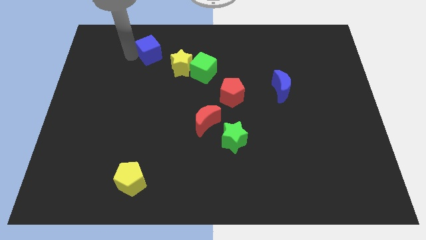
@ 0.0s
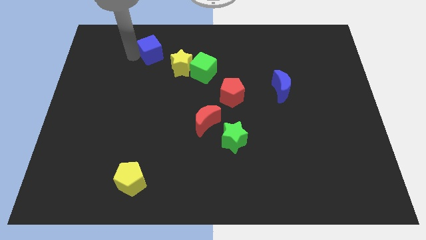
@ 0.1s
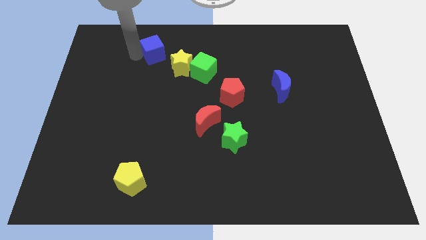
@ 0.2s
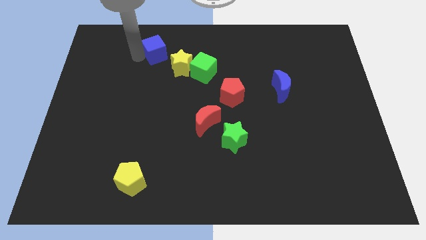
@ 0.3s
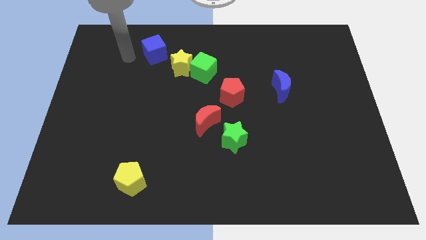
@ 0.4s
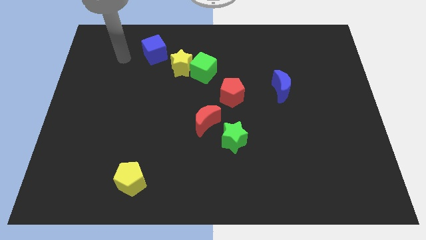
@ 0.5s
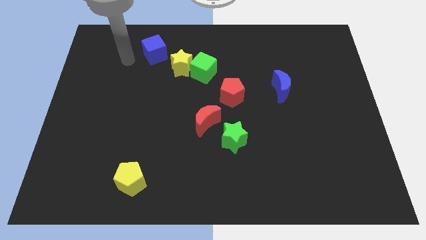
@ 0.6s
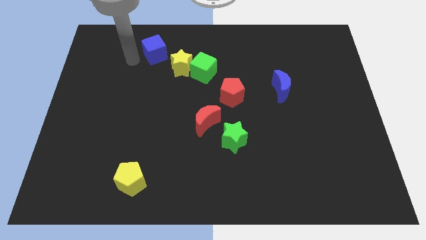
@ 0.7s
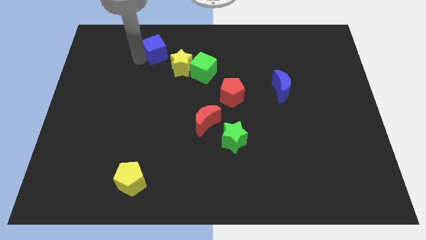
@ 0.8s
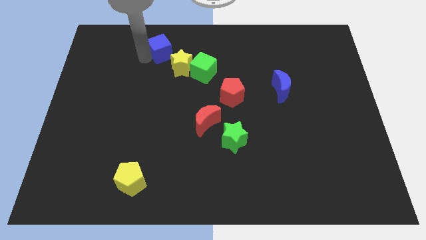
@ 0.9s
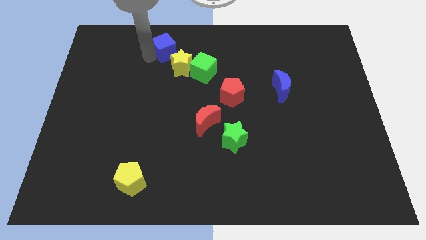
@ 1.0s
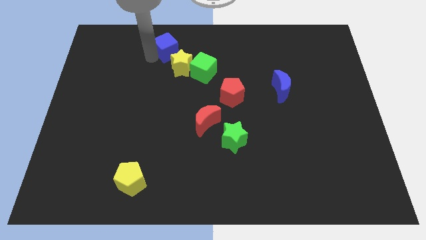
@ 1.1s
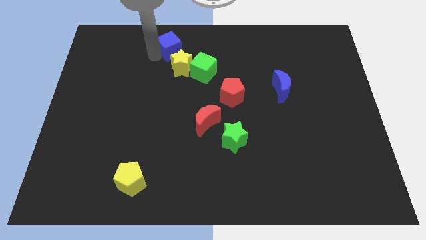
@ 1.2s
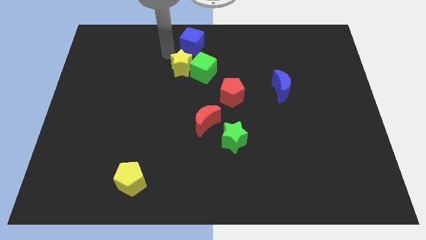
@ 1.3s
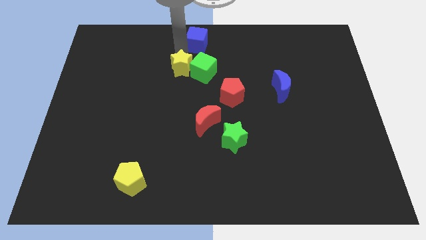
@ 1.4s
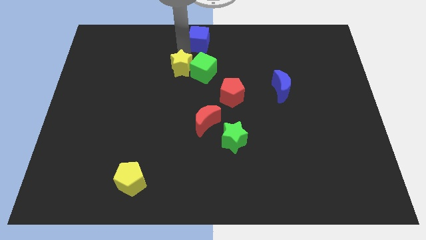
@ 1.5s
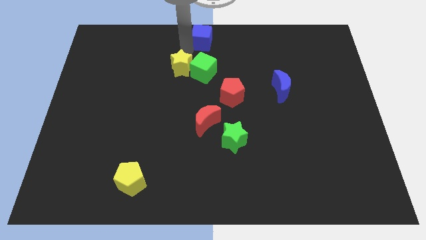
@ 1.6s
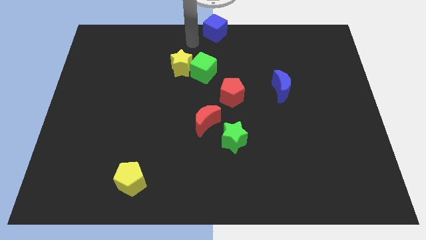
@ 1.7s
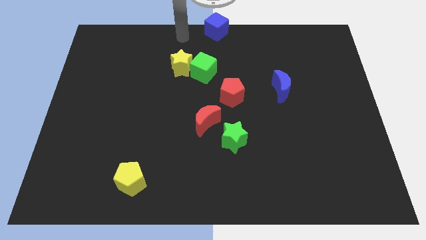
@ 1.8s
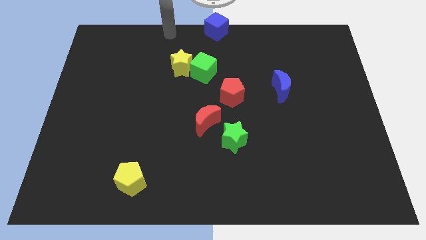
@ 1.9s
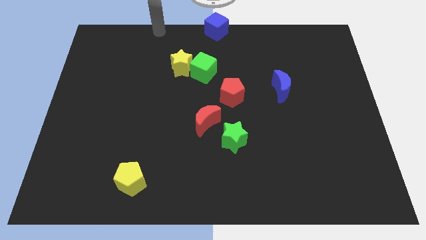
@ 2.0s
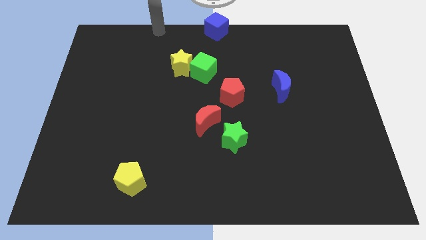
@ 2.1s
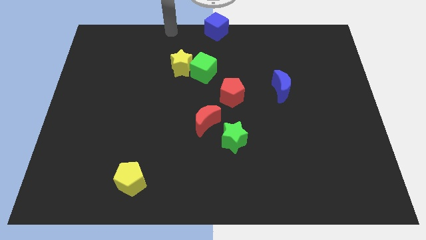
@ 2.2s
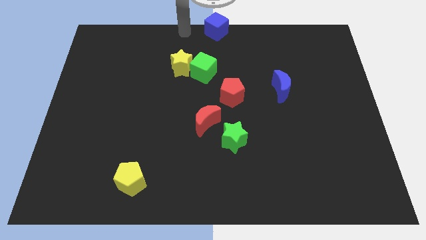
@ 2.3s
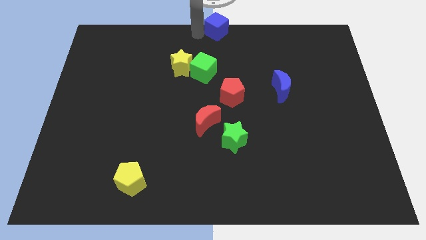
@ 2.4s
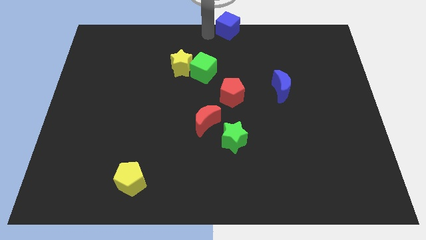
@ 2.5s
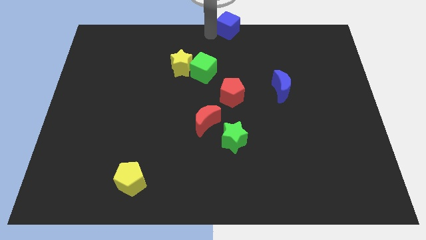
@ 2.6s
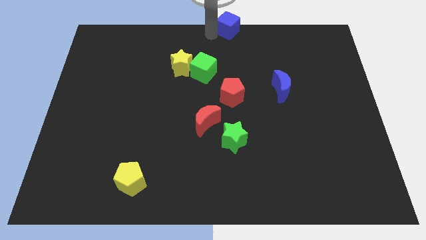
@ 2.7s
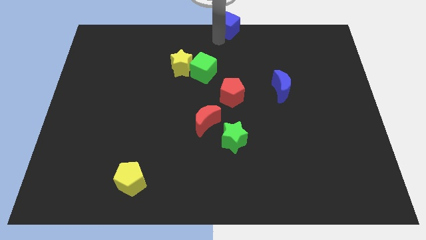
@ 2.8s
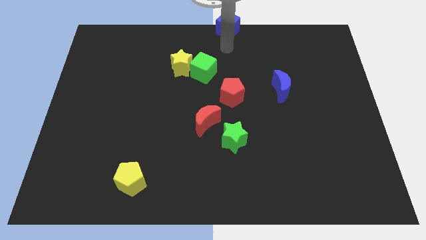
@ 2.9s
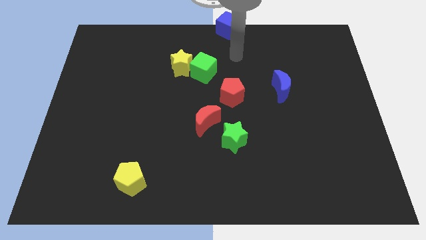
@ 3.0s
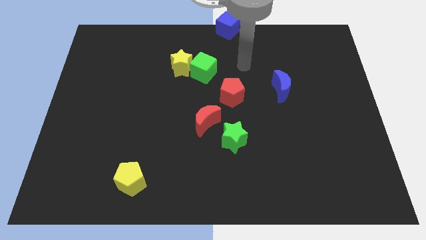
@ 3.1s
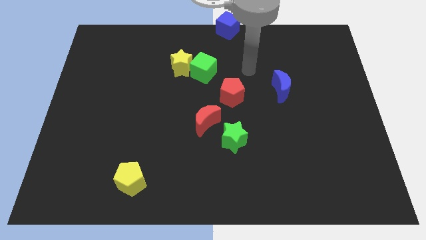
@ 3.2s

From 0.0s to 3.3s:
push blue cube vertically above red pentagon

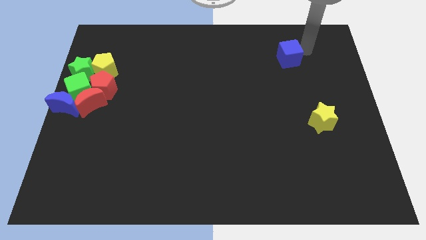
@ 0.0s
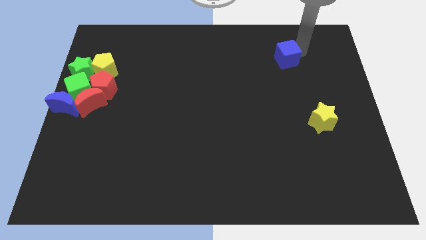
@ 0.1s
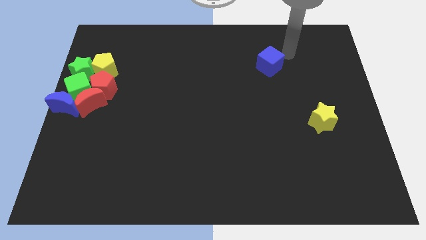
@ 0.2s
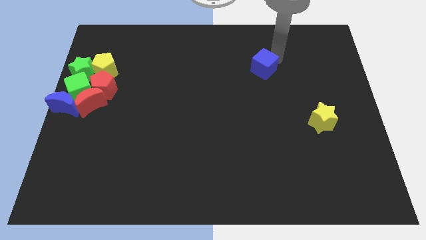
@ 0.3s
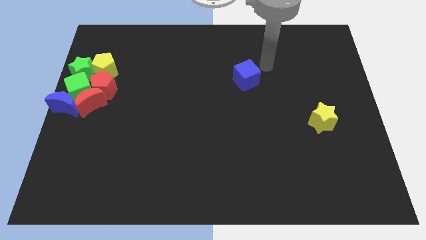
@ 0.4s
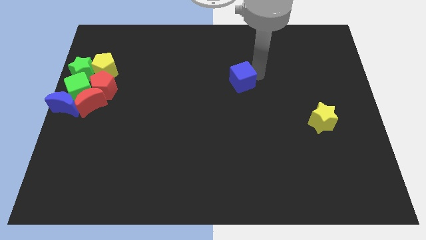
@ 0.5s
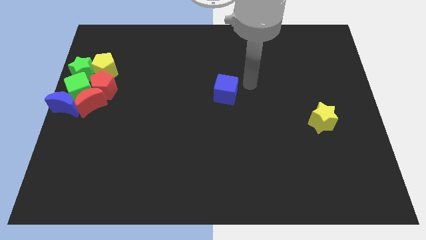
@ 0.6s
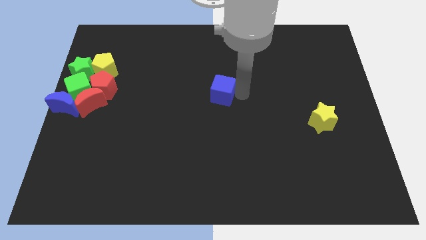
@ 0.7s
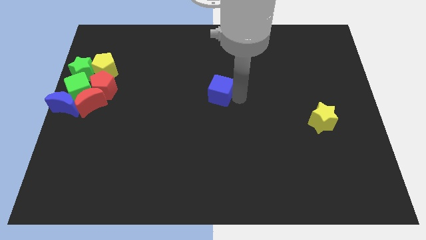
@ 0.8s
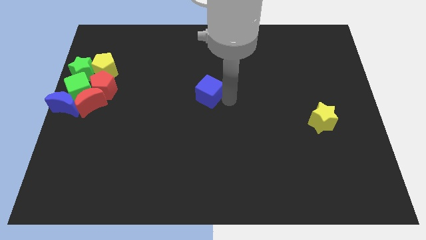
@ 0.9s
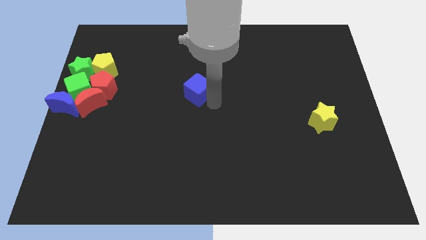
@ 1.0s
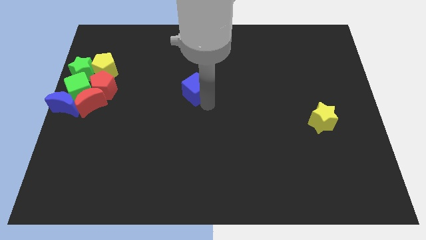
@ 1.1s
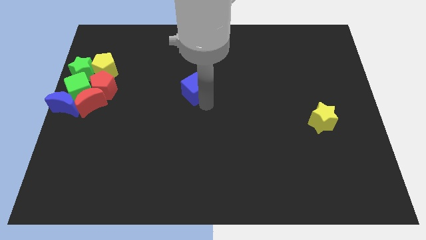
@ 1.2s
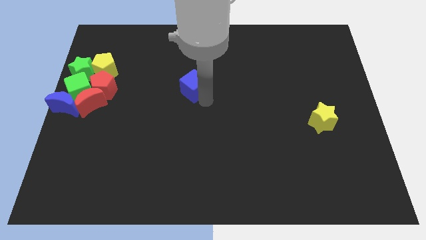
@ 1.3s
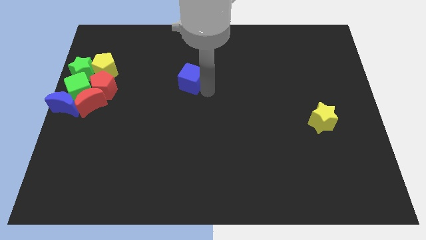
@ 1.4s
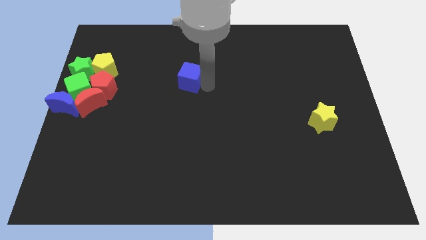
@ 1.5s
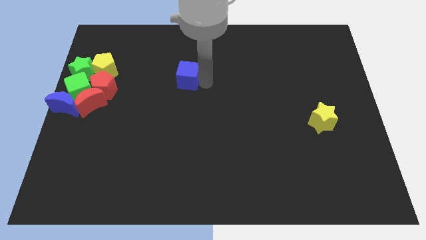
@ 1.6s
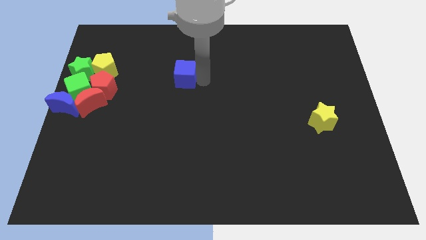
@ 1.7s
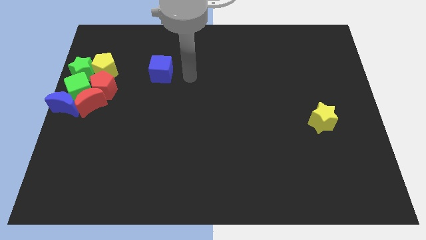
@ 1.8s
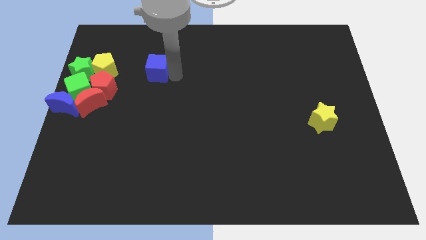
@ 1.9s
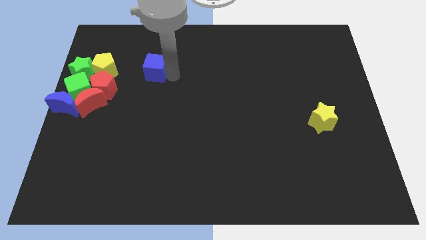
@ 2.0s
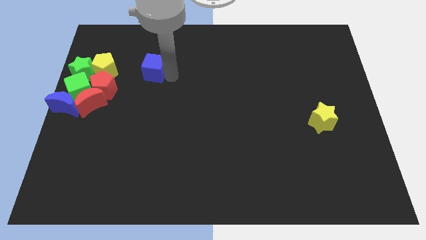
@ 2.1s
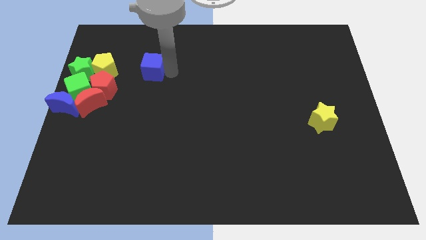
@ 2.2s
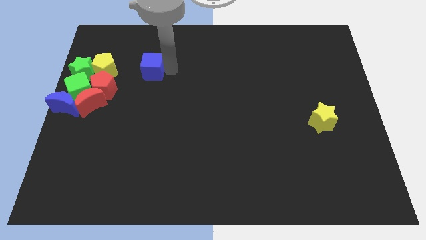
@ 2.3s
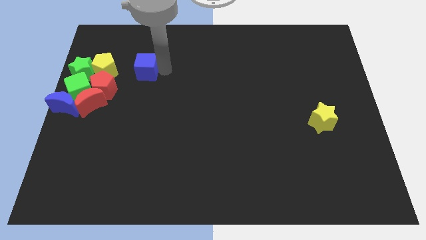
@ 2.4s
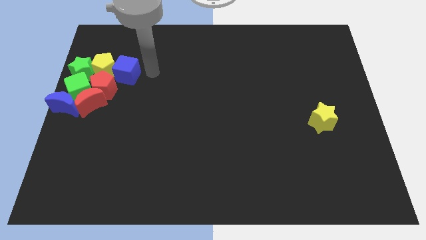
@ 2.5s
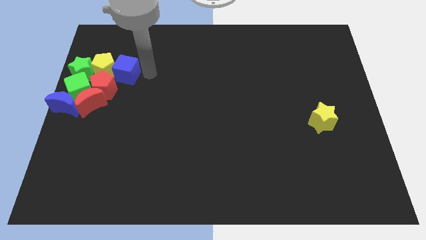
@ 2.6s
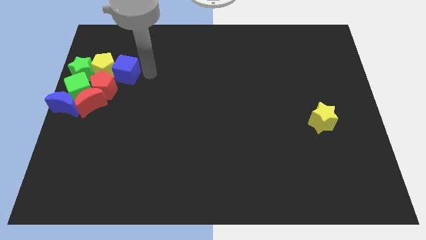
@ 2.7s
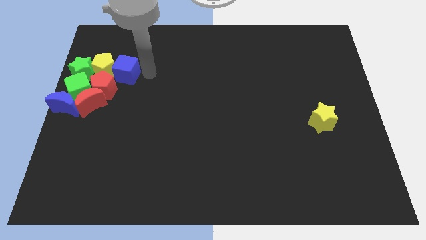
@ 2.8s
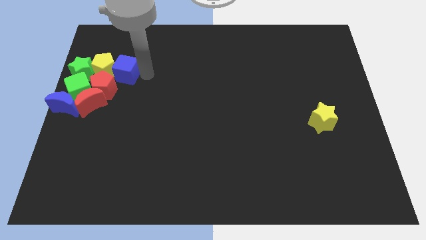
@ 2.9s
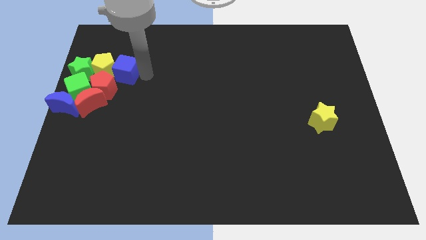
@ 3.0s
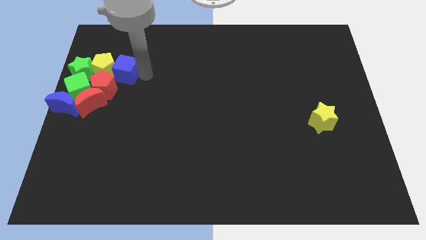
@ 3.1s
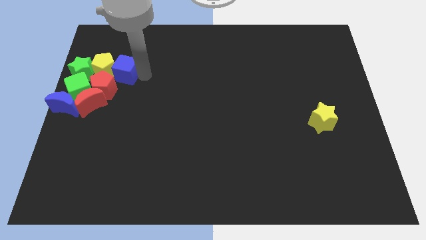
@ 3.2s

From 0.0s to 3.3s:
slide the blue cube right to the yellow pentagon

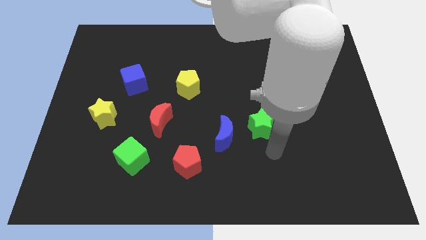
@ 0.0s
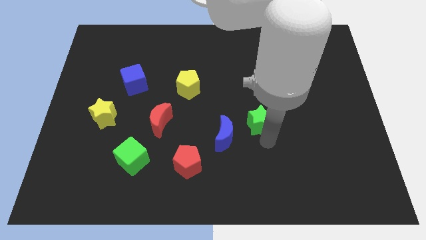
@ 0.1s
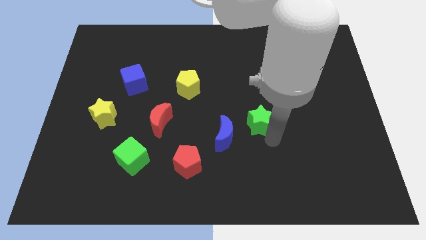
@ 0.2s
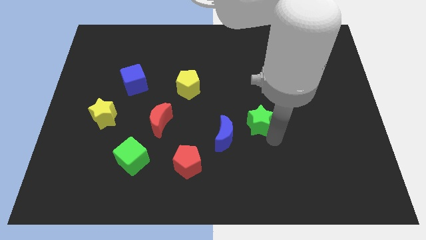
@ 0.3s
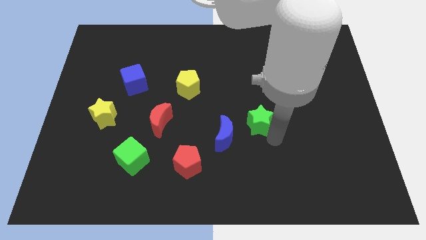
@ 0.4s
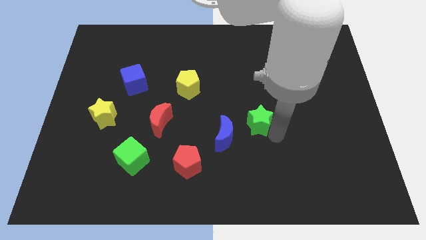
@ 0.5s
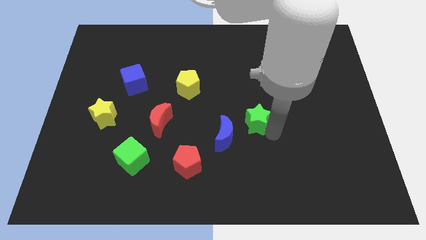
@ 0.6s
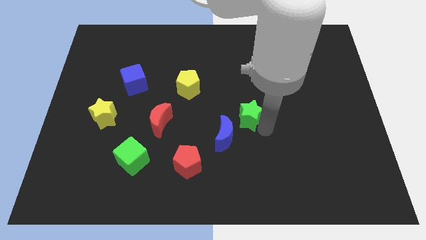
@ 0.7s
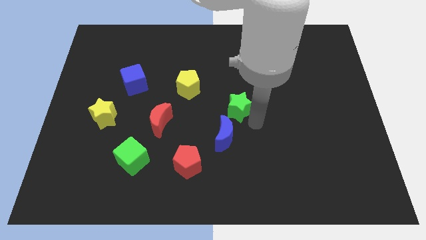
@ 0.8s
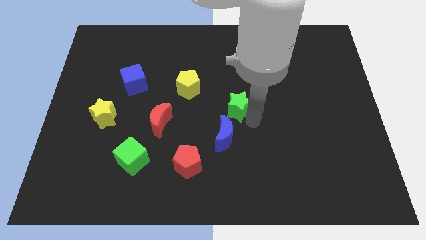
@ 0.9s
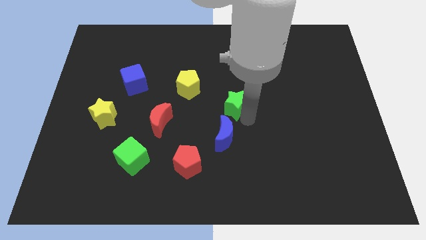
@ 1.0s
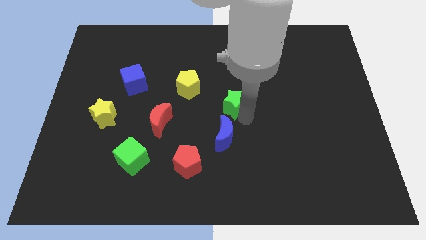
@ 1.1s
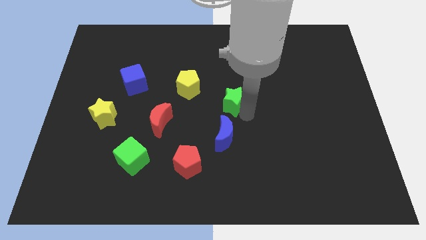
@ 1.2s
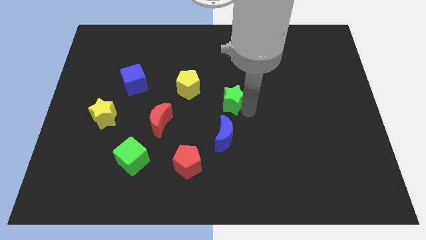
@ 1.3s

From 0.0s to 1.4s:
place the green star diagonally top right to the blue moon

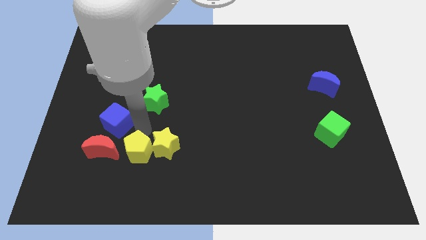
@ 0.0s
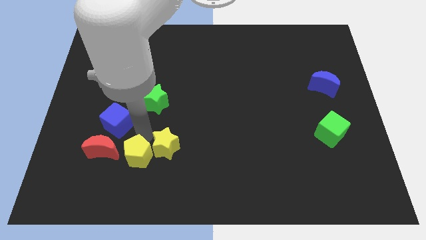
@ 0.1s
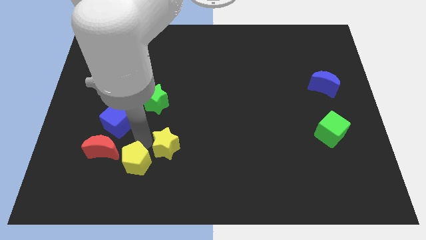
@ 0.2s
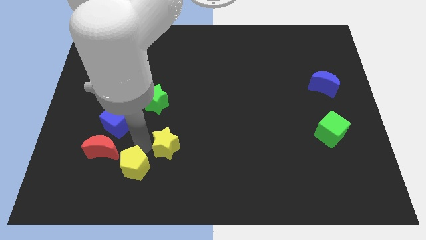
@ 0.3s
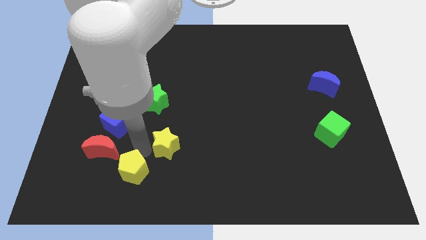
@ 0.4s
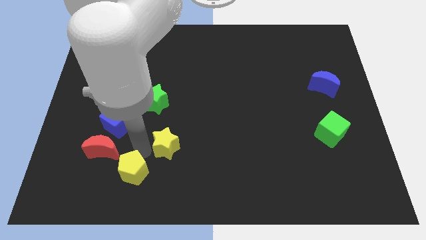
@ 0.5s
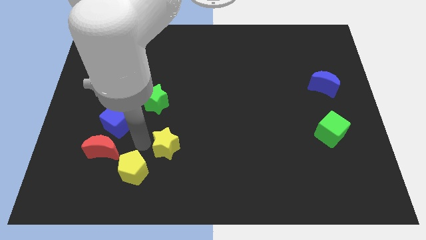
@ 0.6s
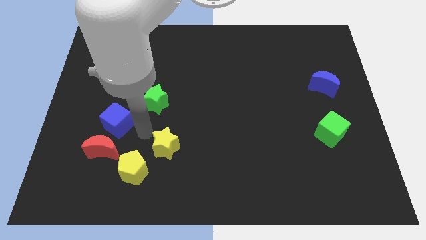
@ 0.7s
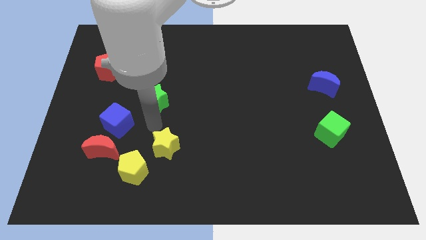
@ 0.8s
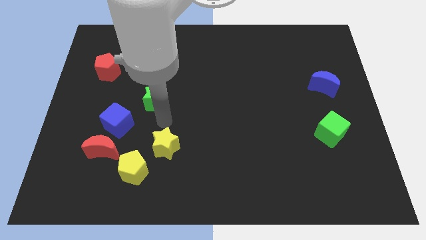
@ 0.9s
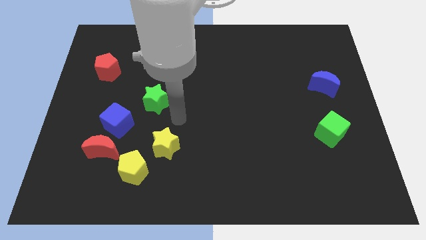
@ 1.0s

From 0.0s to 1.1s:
slightly push the yellow pentagon downward
